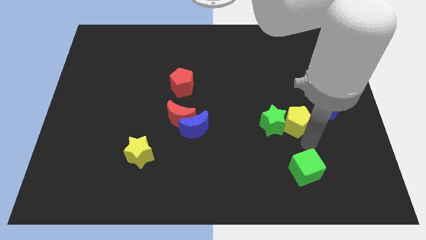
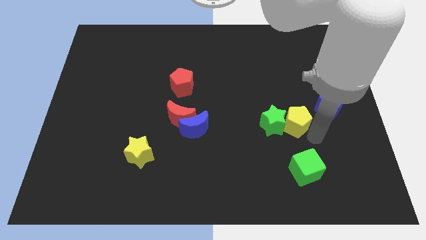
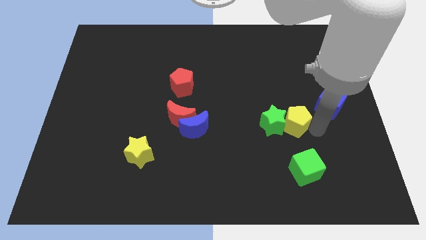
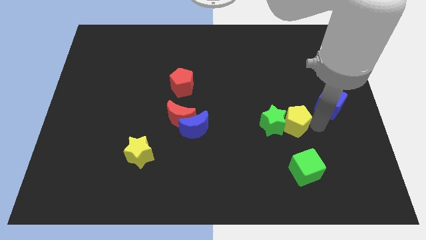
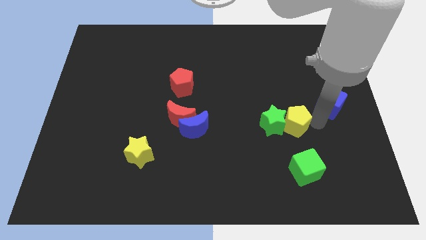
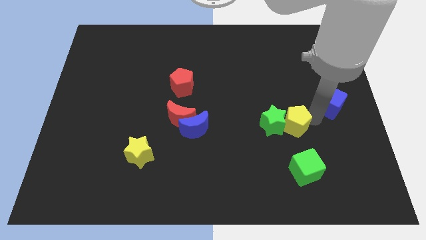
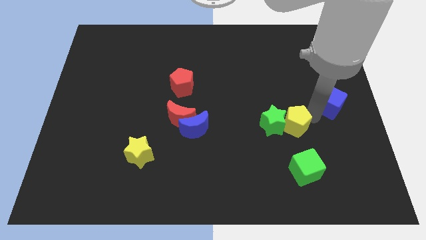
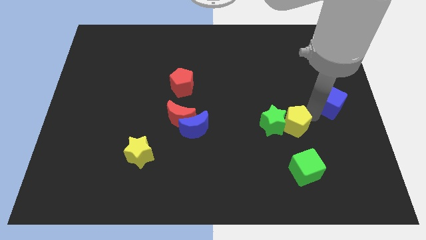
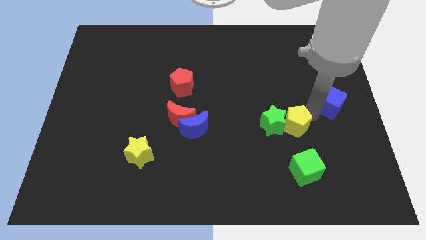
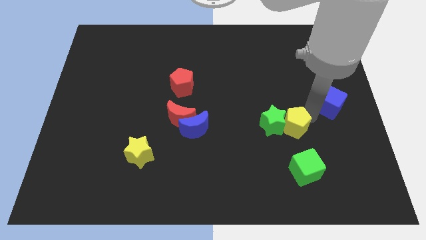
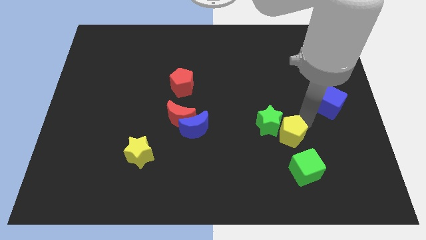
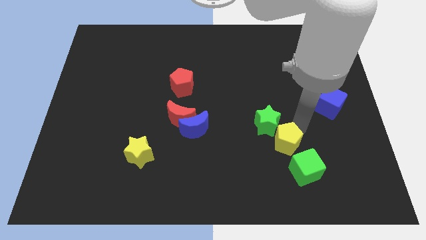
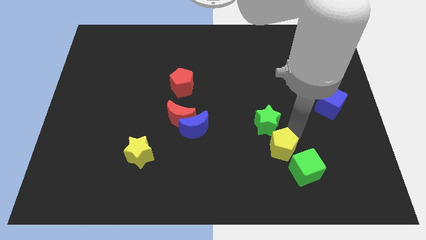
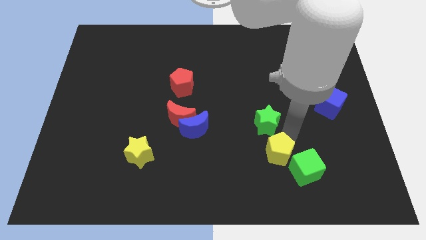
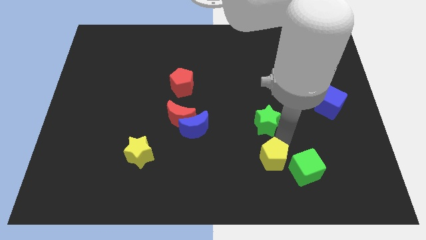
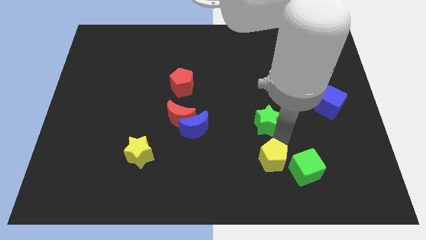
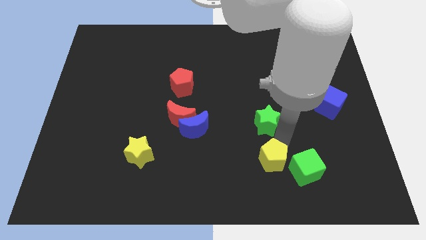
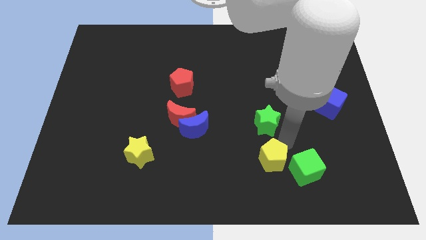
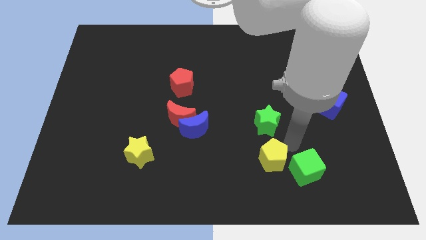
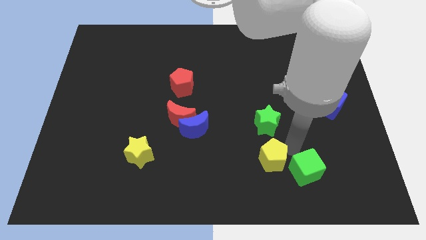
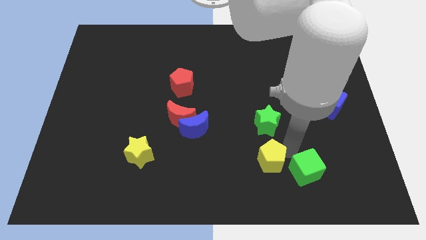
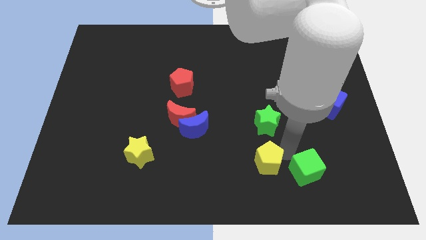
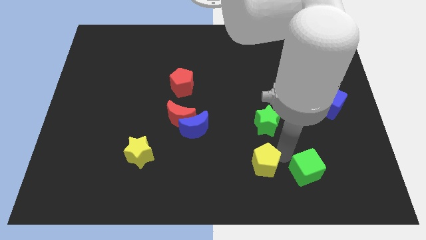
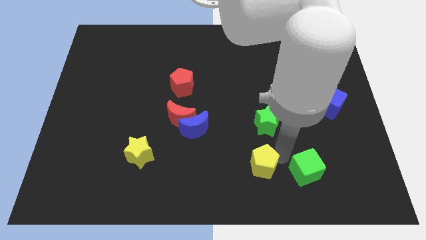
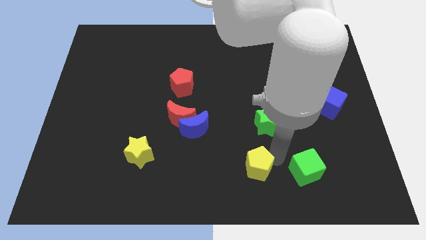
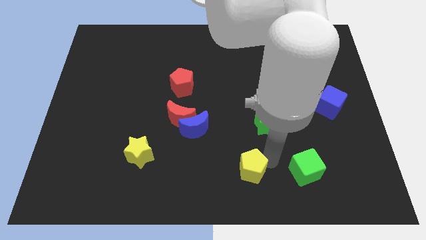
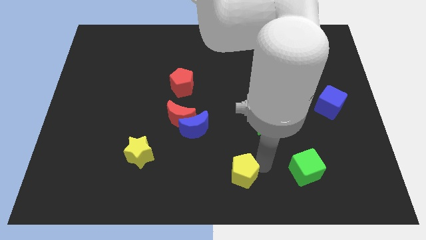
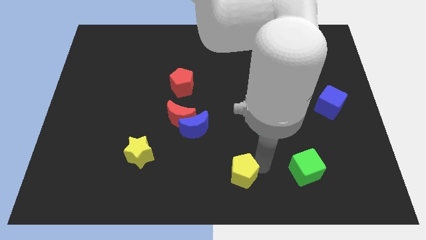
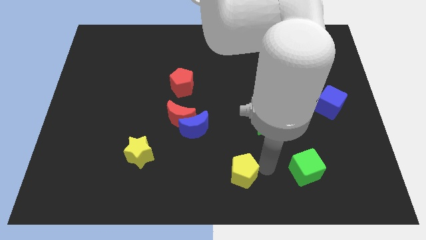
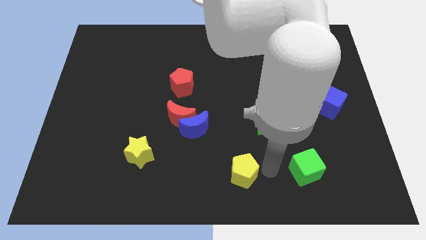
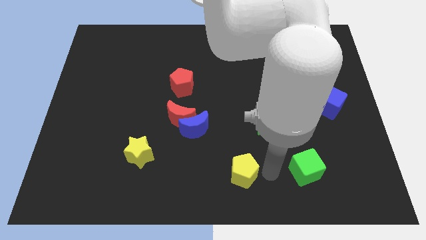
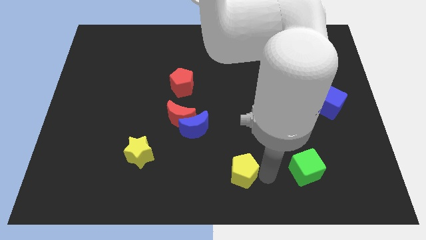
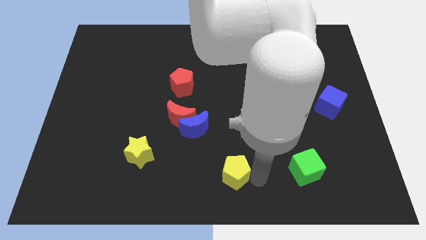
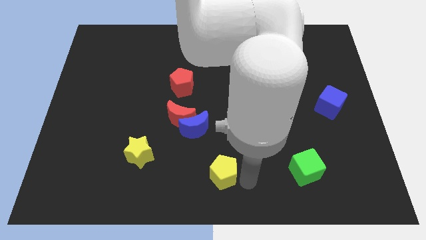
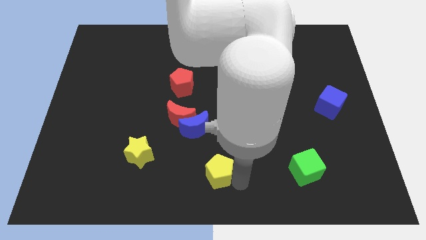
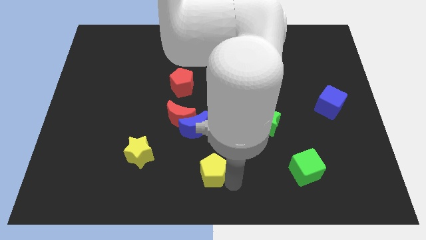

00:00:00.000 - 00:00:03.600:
push the yellow pentagon to the bottom center of the board

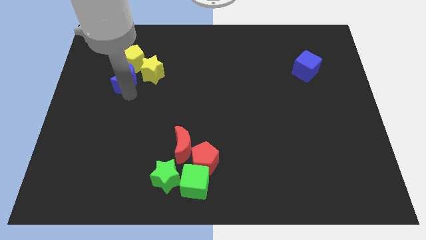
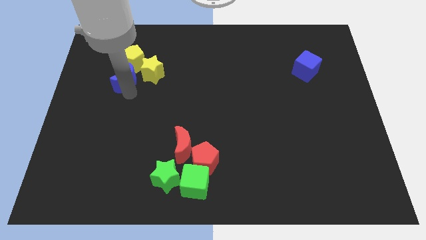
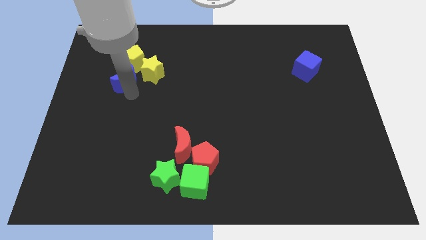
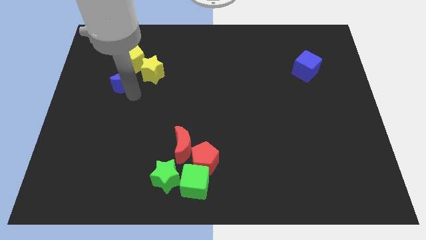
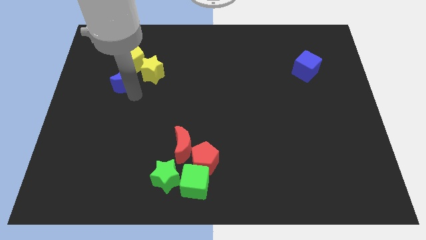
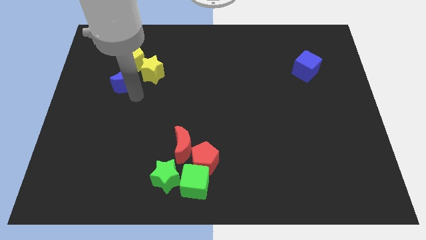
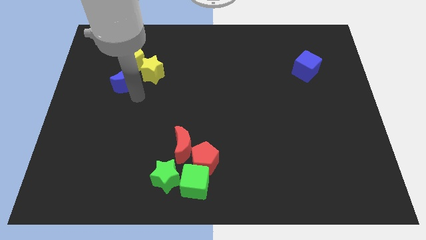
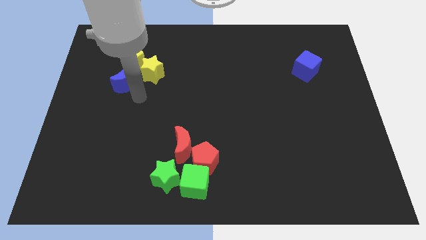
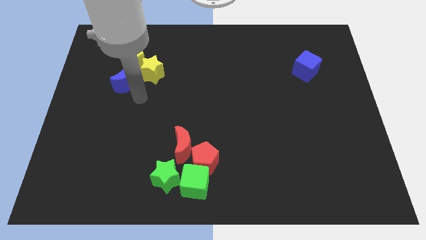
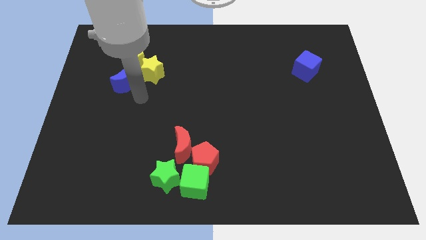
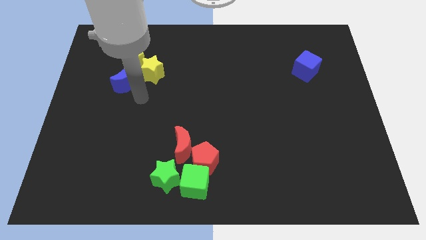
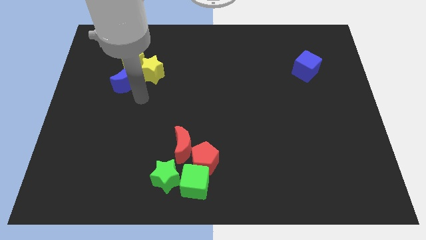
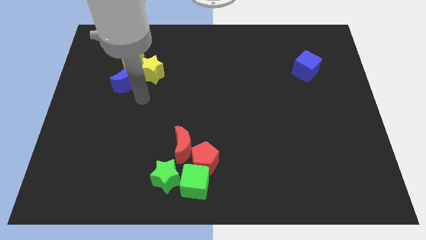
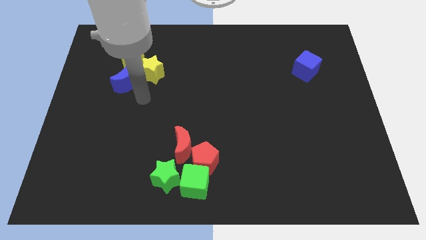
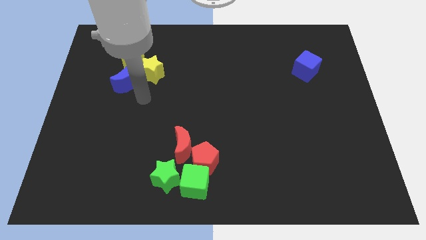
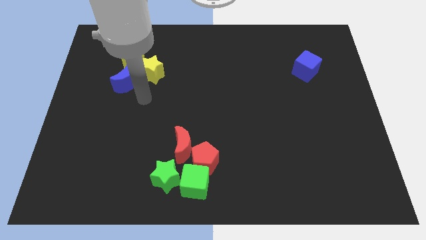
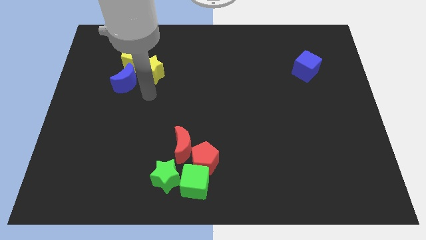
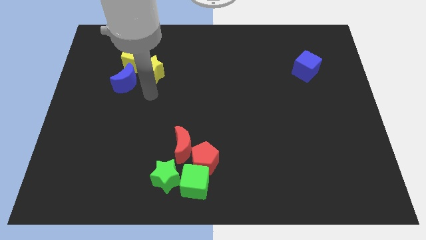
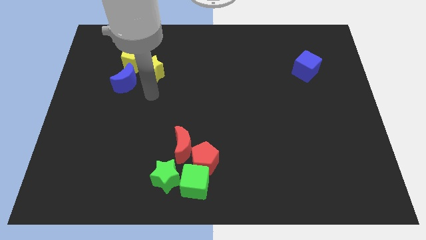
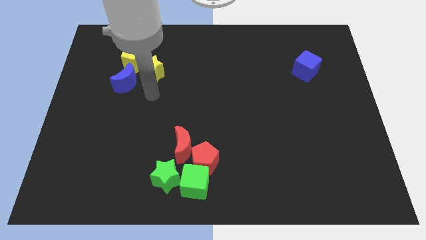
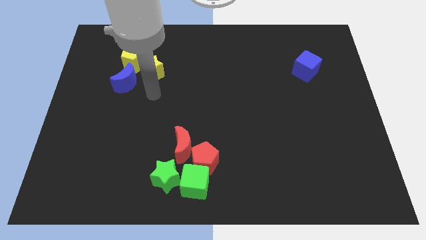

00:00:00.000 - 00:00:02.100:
move the blue moon slightly up

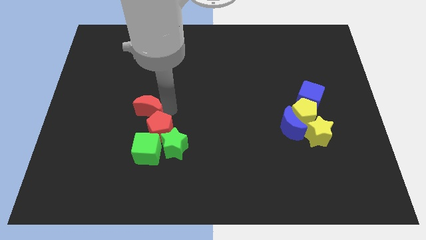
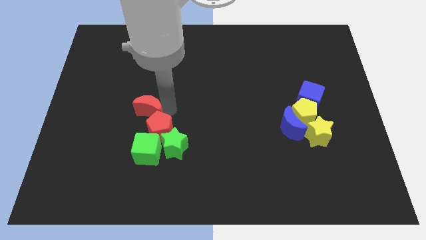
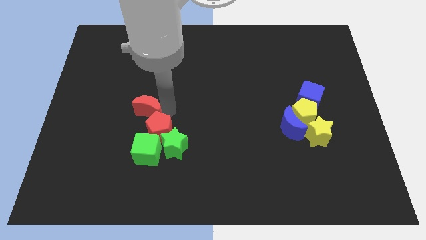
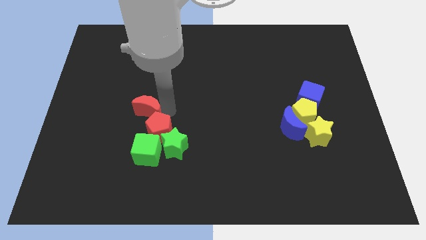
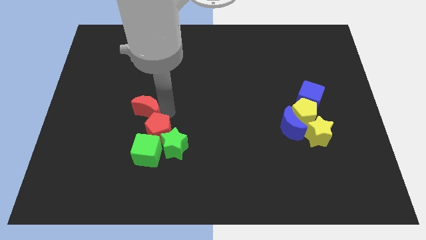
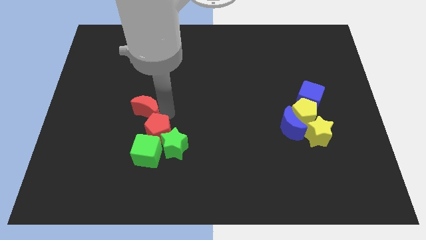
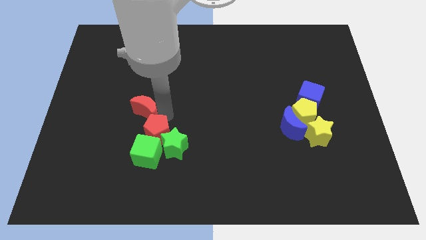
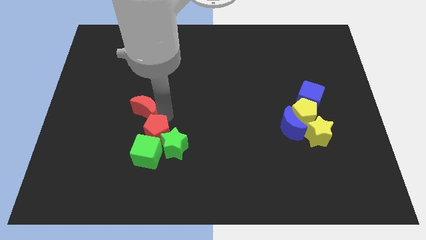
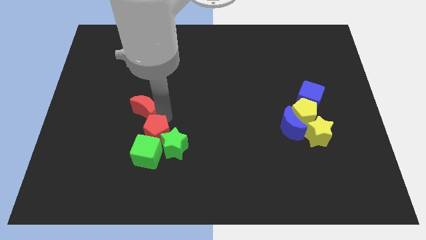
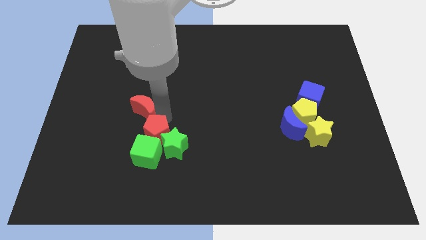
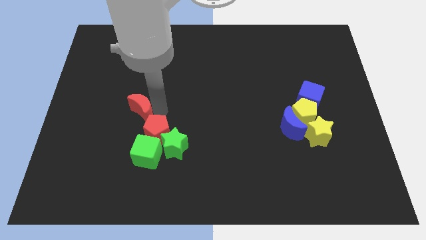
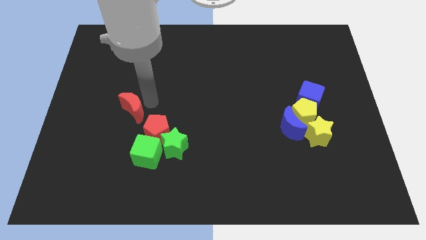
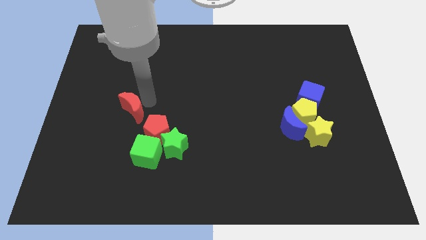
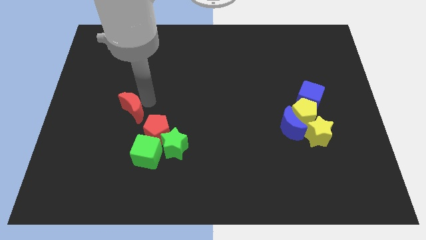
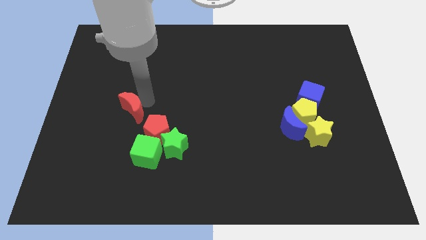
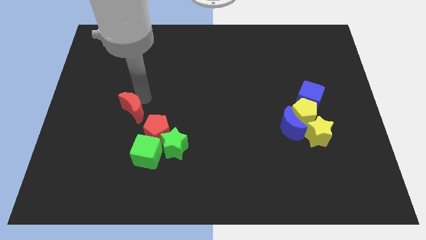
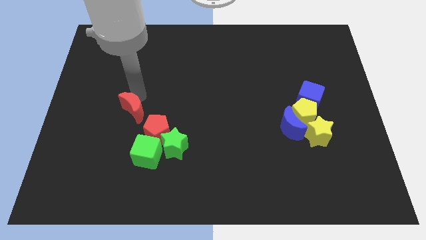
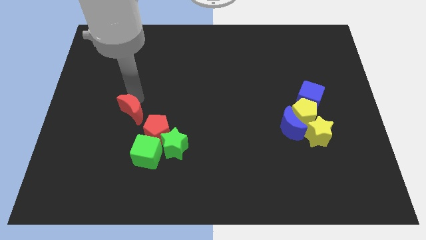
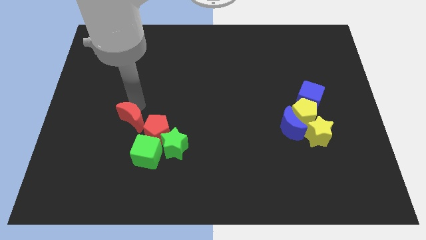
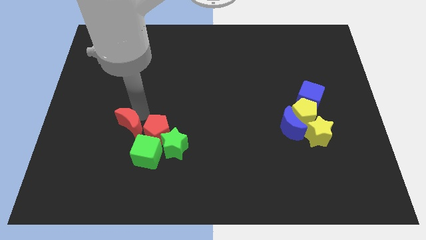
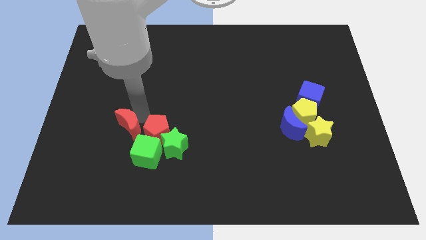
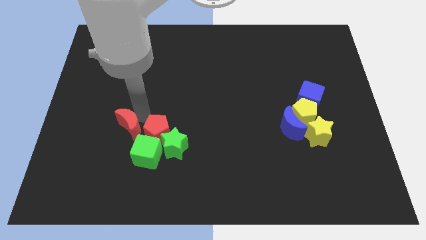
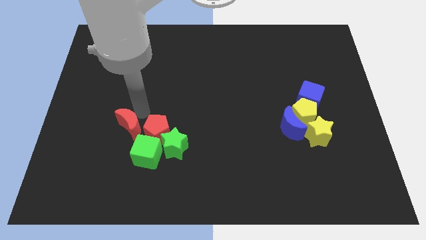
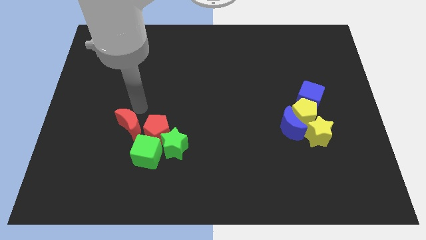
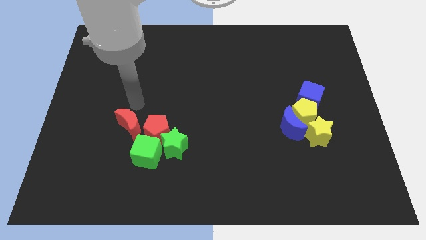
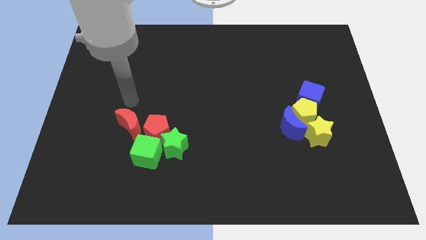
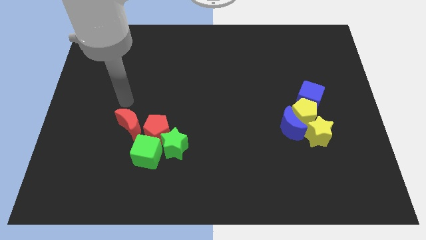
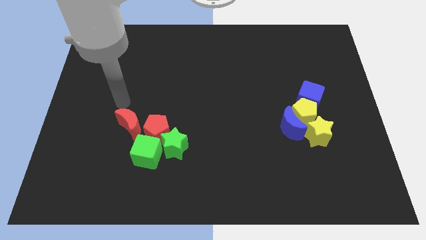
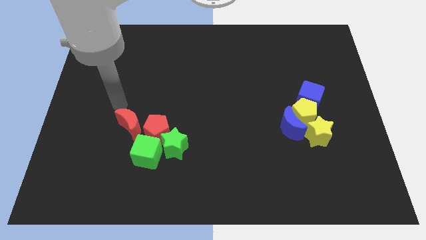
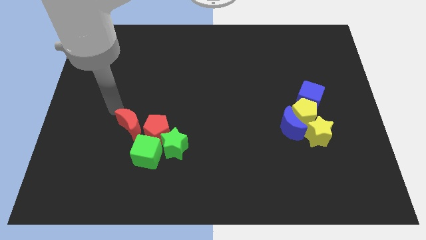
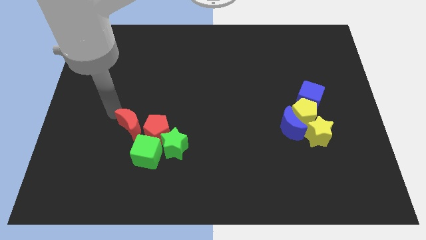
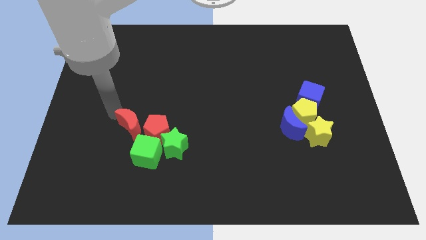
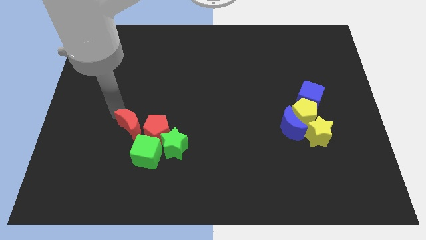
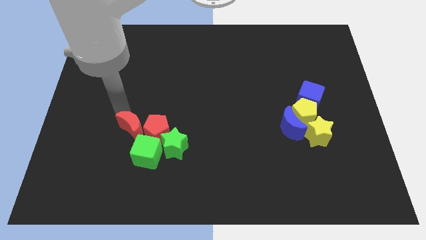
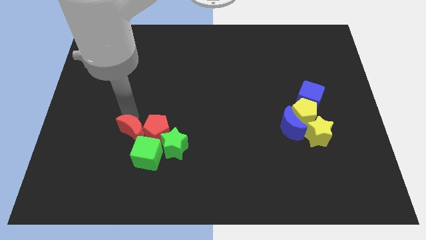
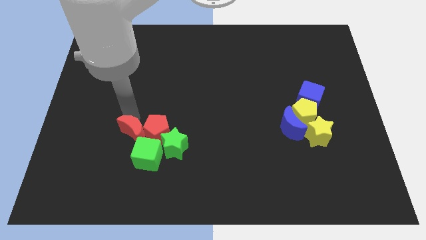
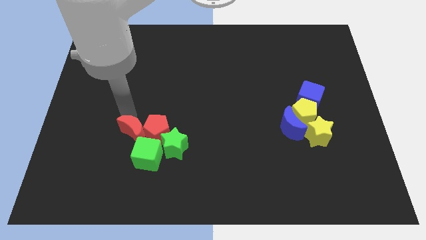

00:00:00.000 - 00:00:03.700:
place the red moon left to the red pentagon
